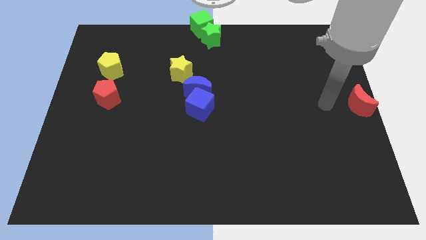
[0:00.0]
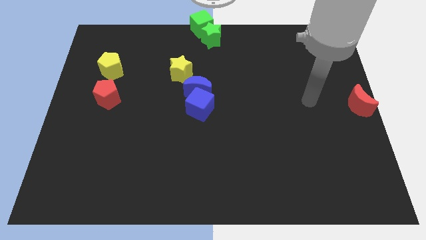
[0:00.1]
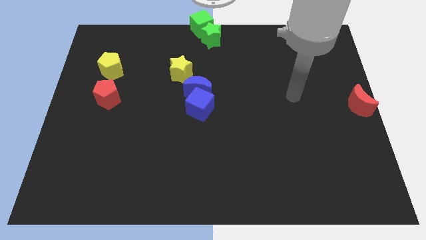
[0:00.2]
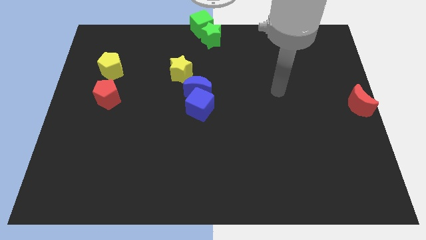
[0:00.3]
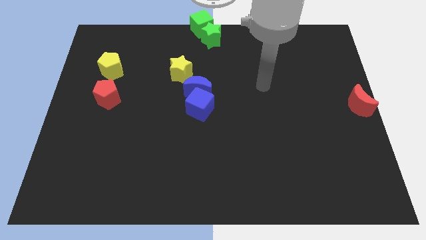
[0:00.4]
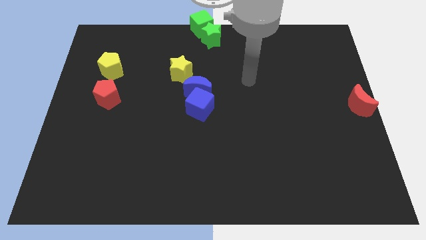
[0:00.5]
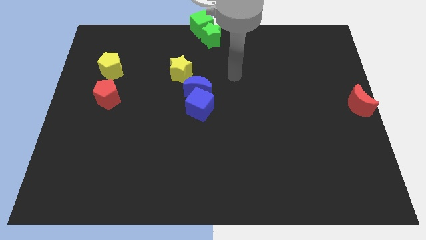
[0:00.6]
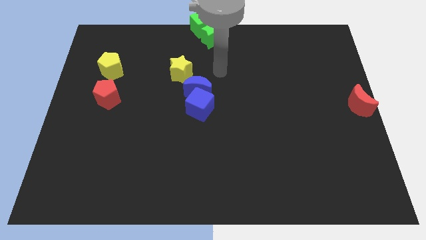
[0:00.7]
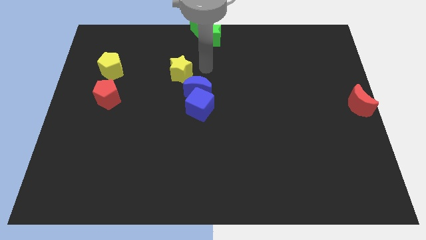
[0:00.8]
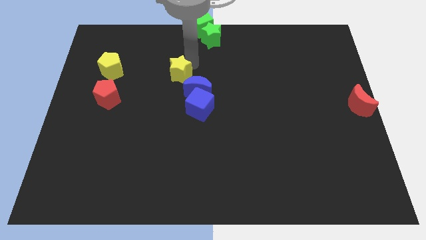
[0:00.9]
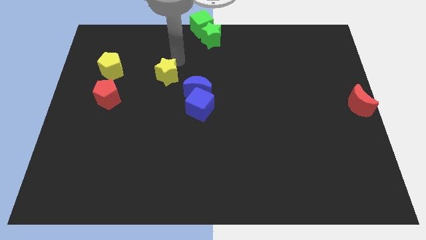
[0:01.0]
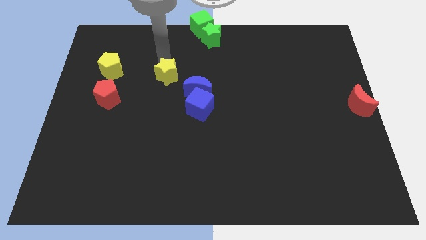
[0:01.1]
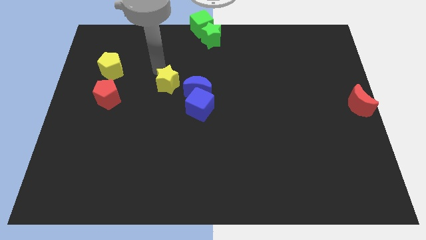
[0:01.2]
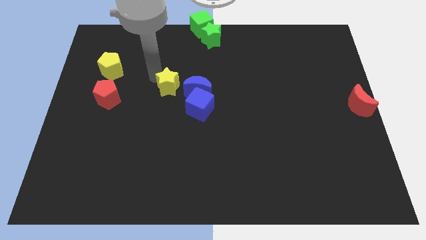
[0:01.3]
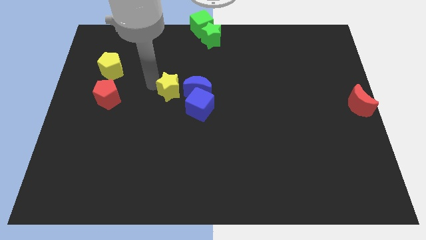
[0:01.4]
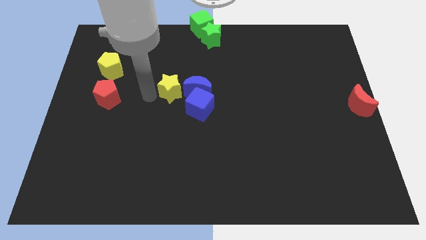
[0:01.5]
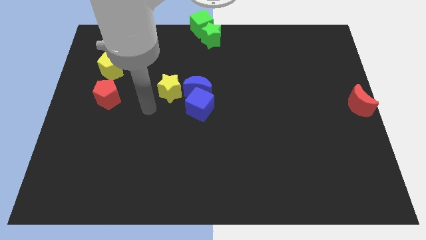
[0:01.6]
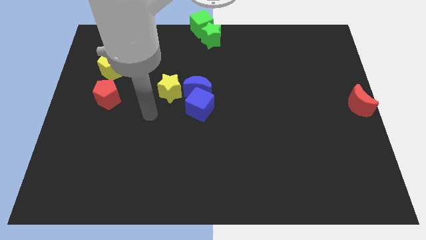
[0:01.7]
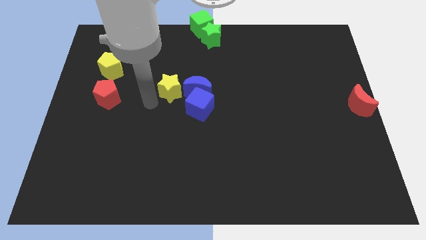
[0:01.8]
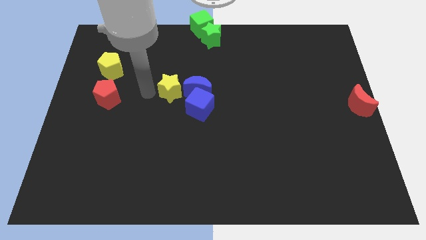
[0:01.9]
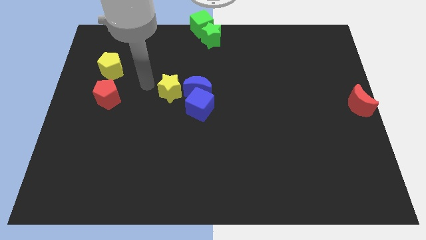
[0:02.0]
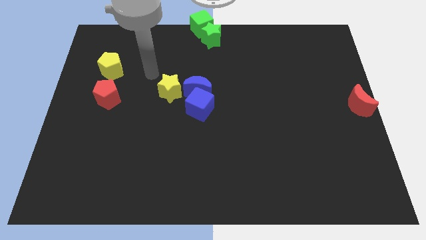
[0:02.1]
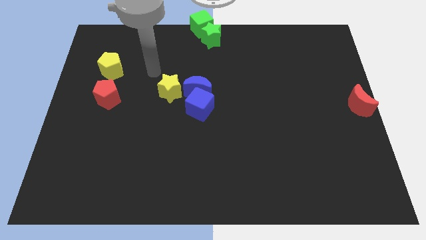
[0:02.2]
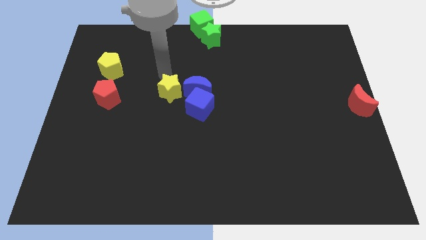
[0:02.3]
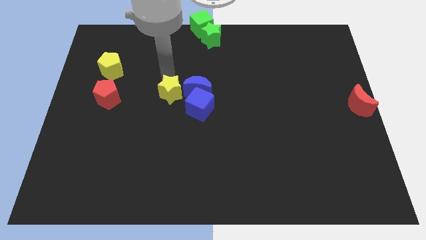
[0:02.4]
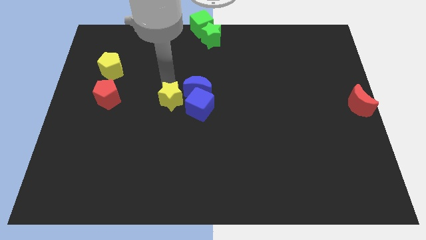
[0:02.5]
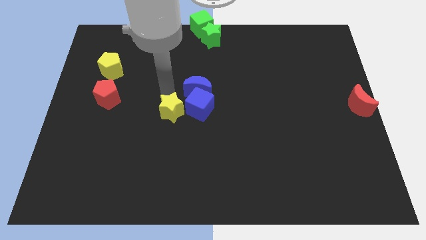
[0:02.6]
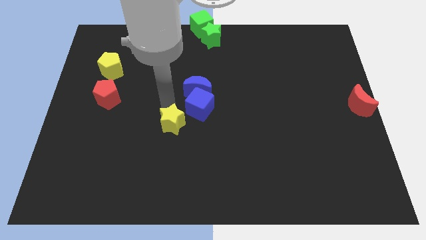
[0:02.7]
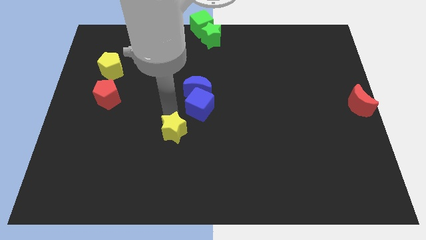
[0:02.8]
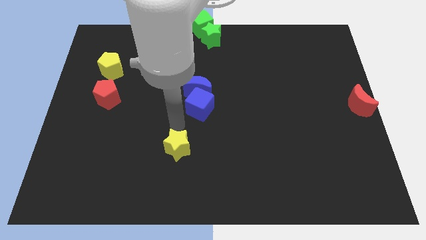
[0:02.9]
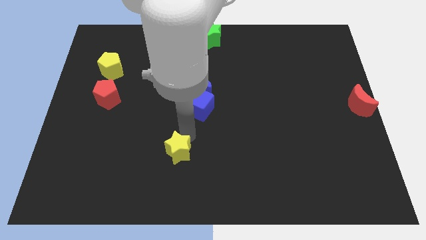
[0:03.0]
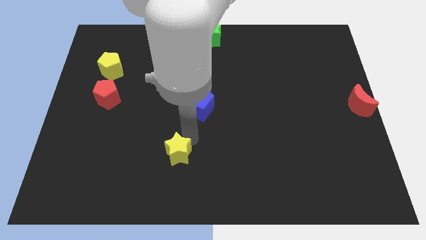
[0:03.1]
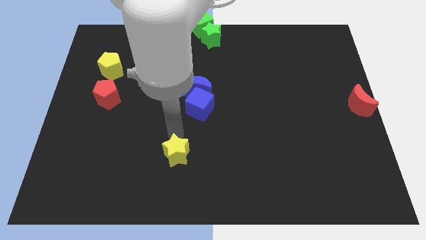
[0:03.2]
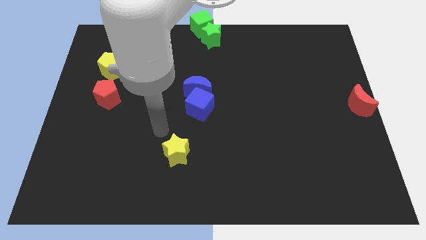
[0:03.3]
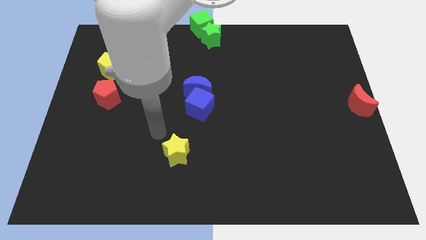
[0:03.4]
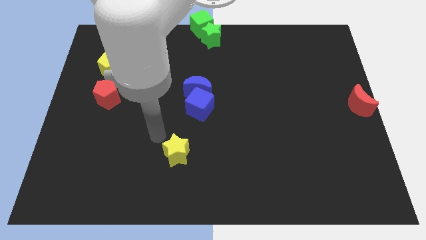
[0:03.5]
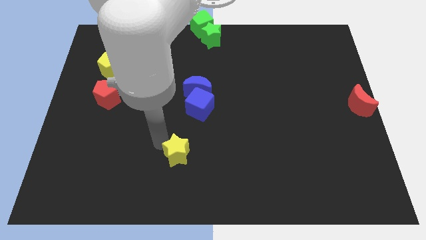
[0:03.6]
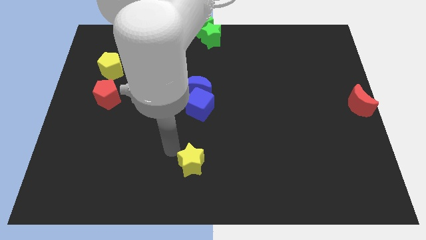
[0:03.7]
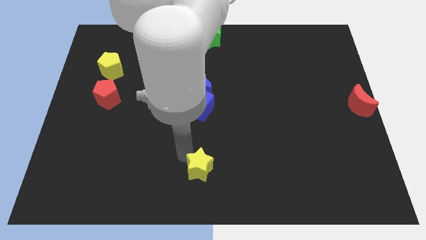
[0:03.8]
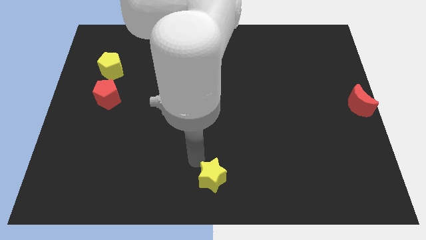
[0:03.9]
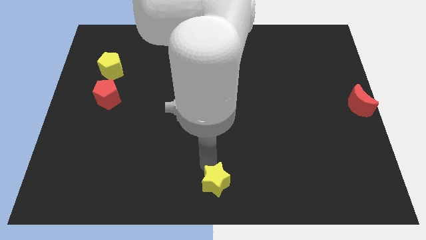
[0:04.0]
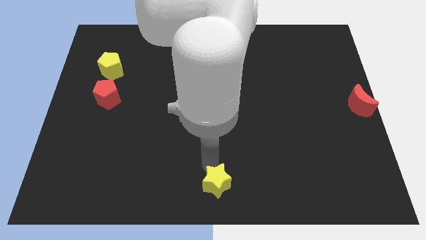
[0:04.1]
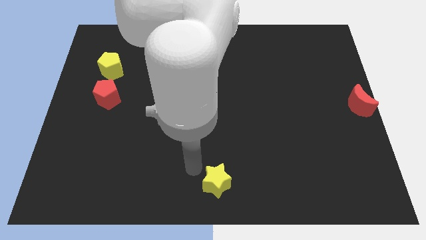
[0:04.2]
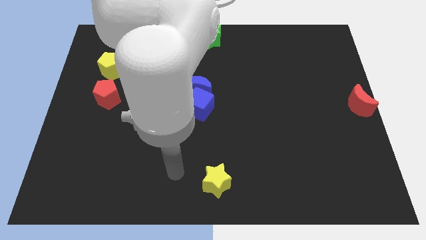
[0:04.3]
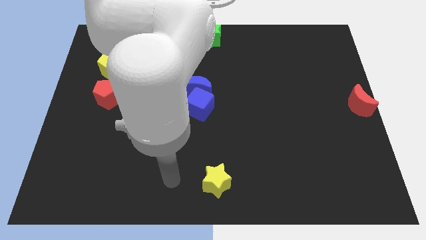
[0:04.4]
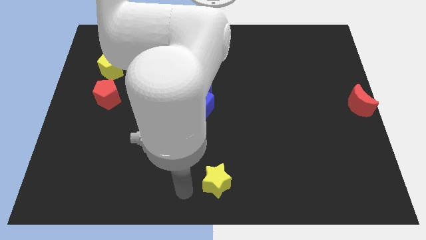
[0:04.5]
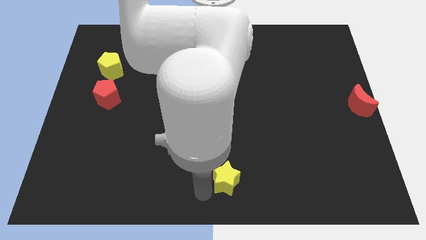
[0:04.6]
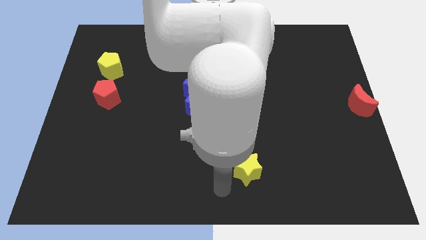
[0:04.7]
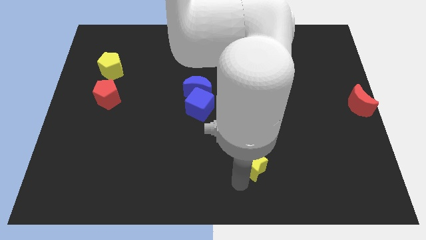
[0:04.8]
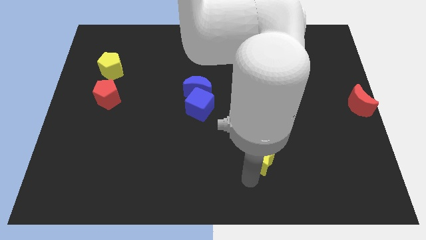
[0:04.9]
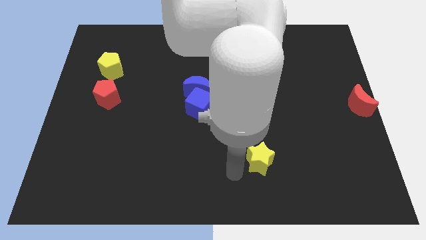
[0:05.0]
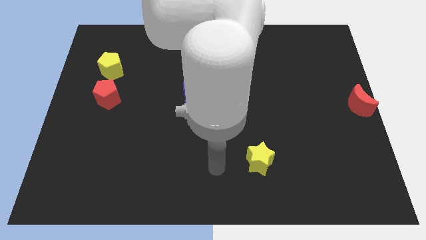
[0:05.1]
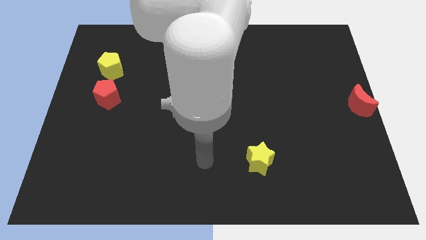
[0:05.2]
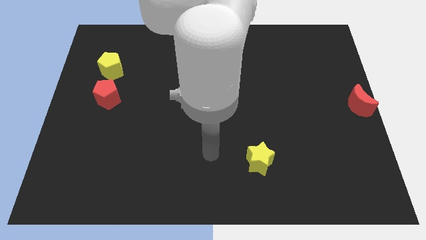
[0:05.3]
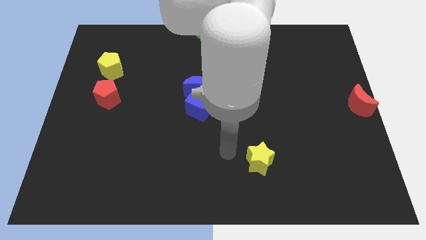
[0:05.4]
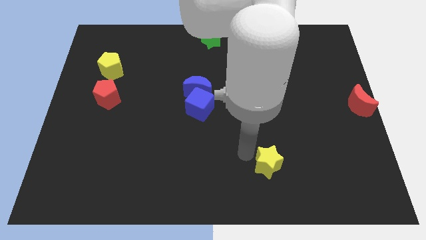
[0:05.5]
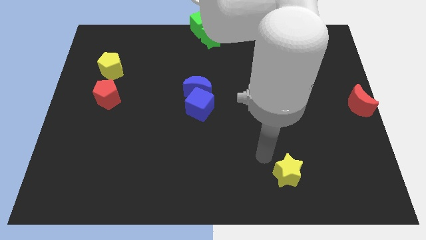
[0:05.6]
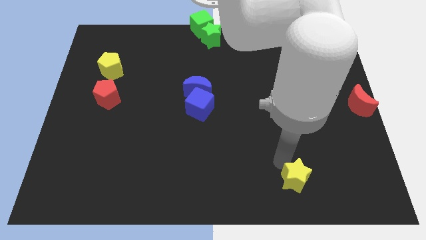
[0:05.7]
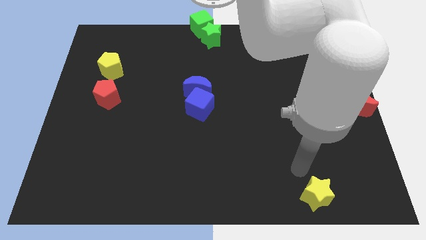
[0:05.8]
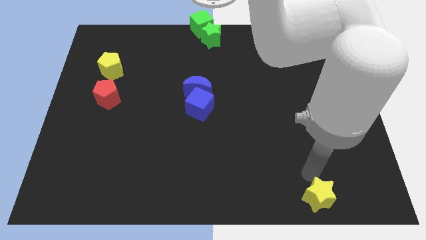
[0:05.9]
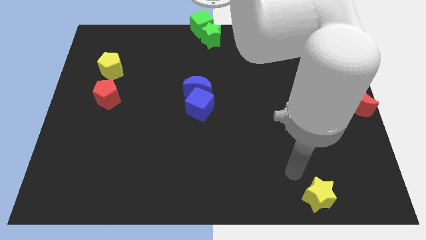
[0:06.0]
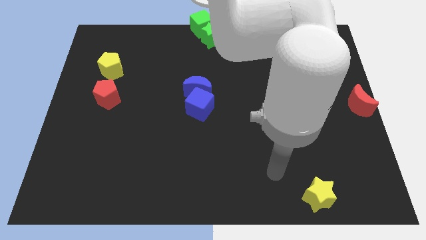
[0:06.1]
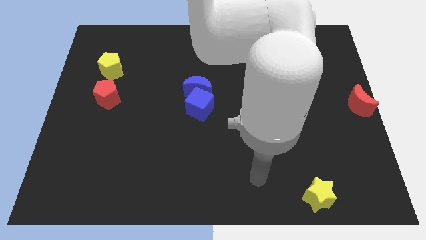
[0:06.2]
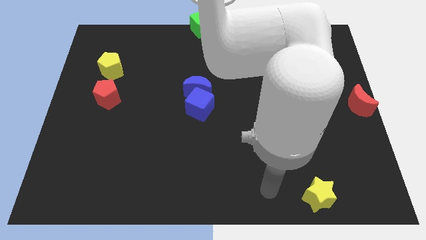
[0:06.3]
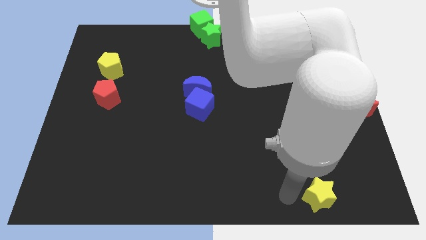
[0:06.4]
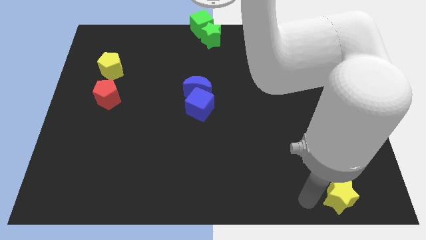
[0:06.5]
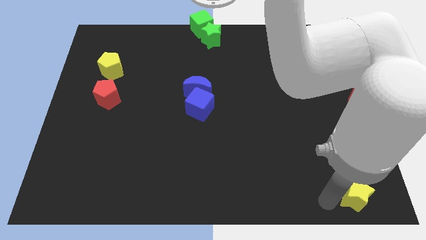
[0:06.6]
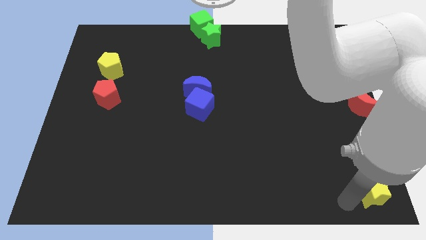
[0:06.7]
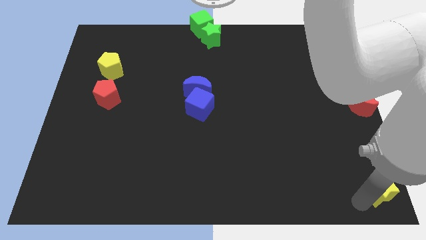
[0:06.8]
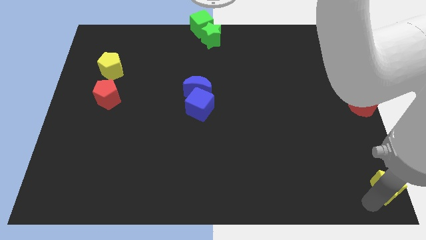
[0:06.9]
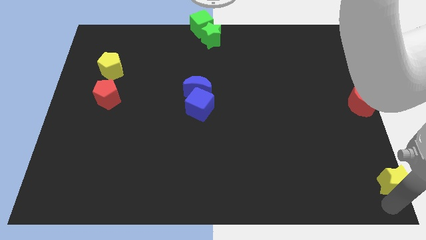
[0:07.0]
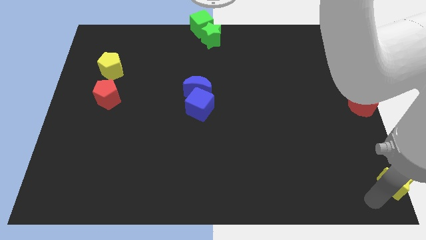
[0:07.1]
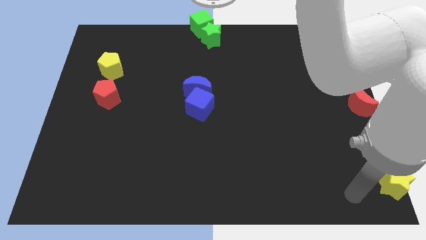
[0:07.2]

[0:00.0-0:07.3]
push the yellow star to the bottom right to the board

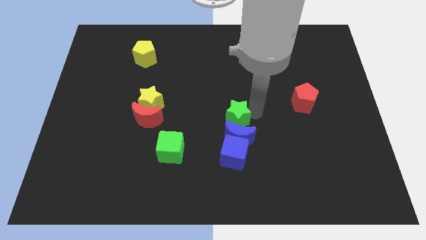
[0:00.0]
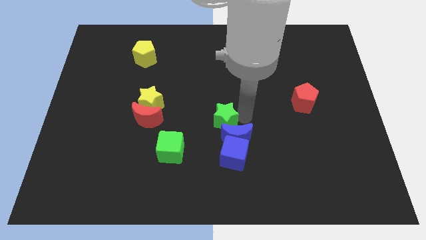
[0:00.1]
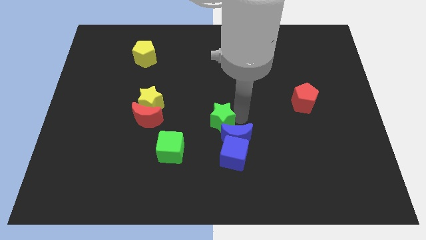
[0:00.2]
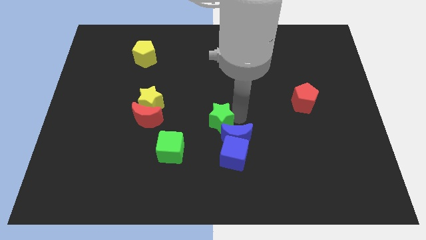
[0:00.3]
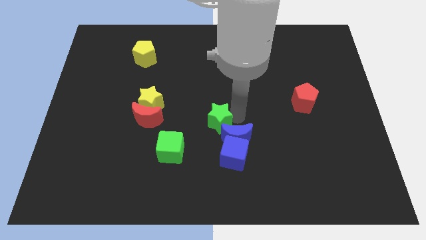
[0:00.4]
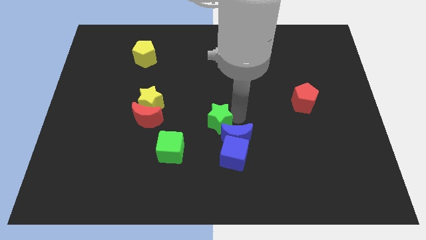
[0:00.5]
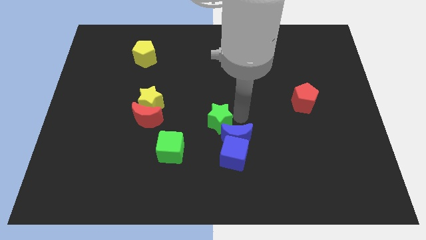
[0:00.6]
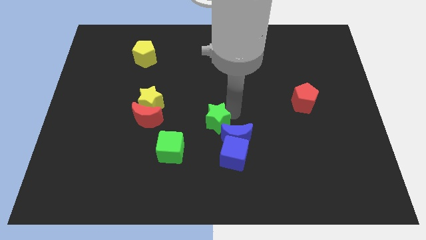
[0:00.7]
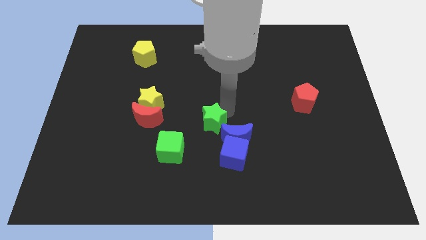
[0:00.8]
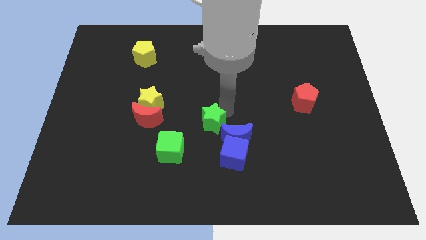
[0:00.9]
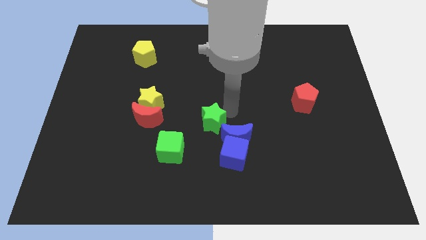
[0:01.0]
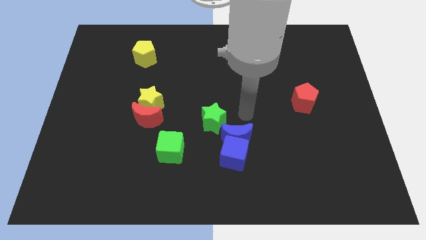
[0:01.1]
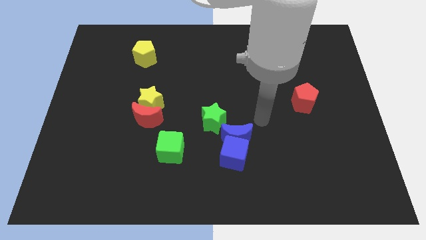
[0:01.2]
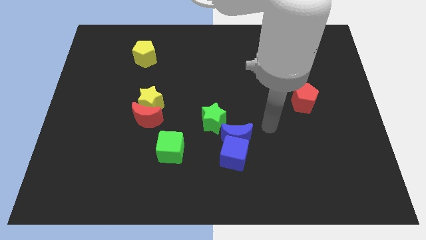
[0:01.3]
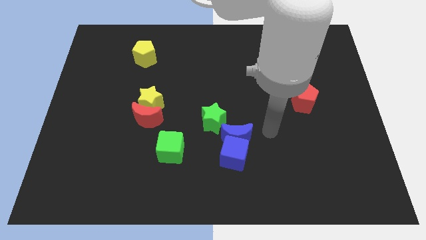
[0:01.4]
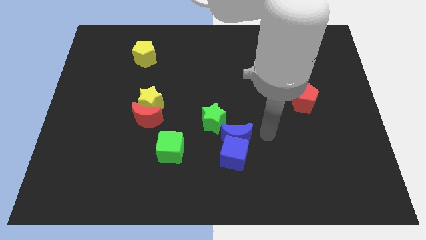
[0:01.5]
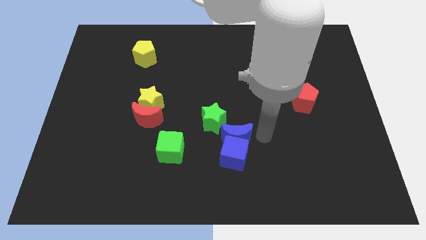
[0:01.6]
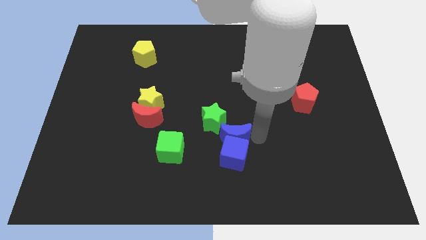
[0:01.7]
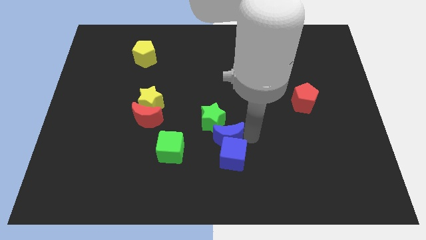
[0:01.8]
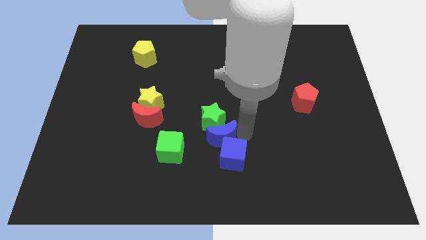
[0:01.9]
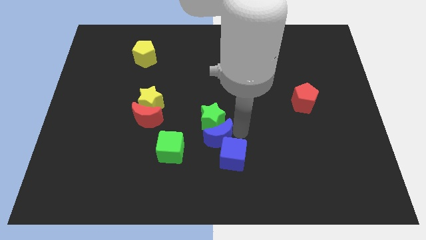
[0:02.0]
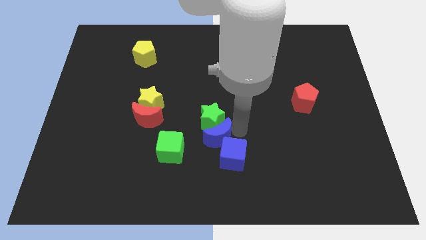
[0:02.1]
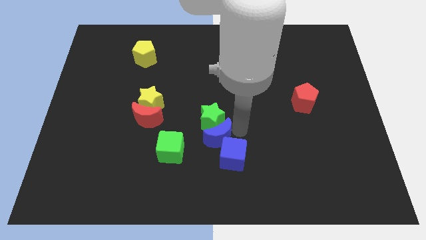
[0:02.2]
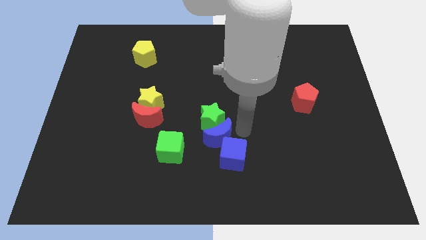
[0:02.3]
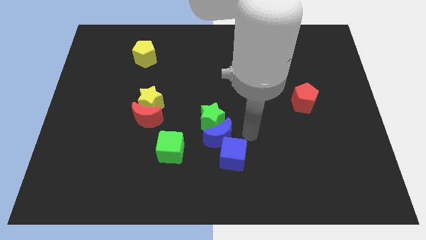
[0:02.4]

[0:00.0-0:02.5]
move the green star and blue moon slightly to the left
